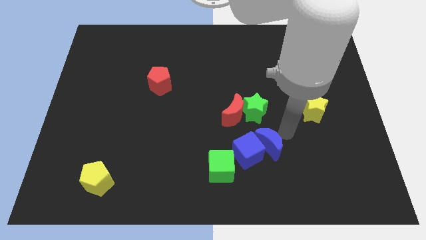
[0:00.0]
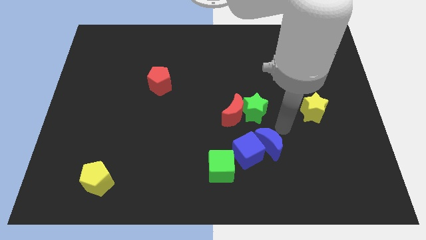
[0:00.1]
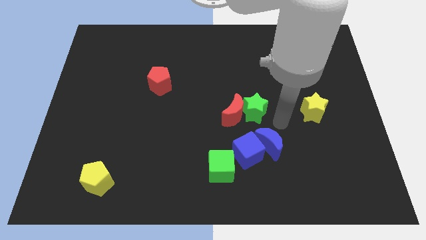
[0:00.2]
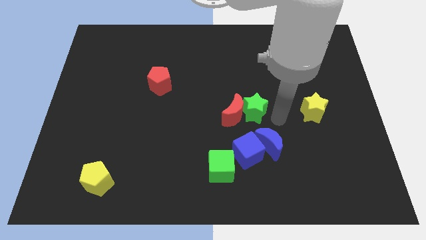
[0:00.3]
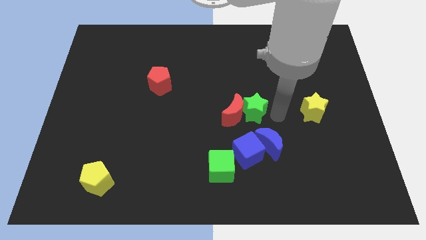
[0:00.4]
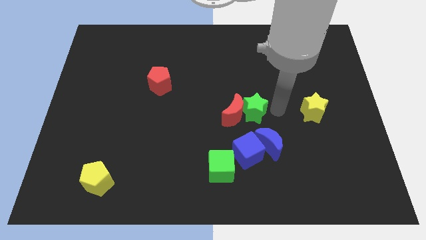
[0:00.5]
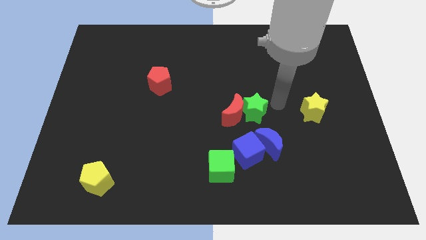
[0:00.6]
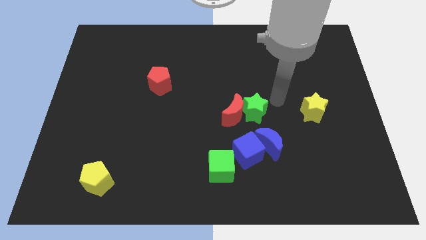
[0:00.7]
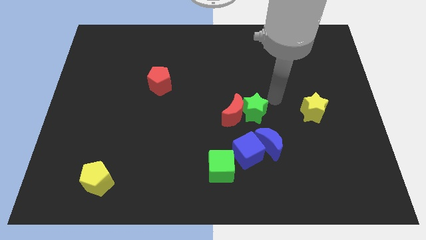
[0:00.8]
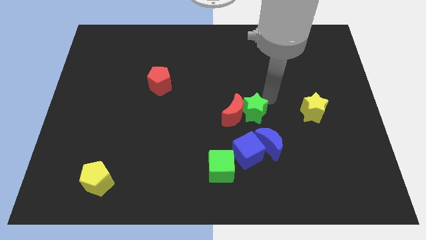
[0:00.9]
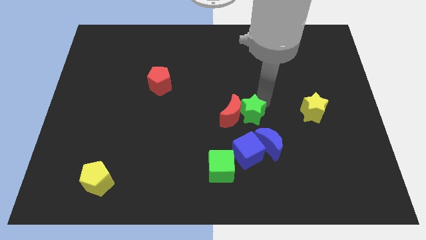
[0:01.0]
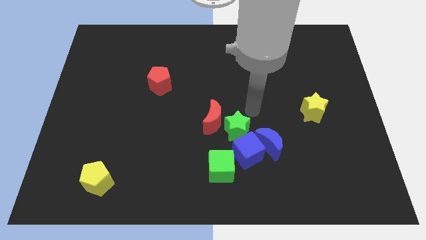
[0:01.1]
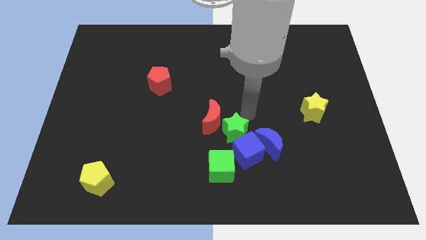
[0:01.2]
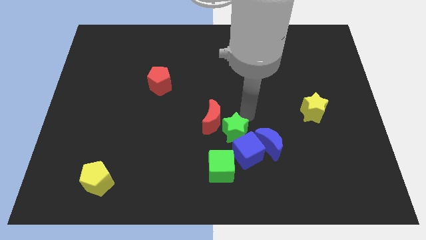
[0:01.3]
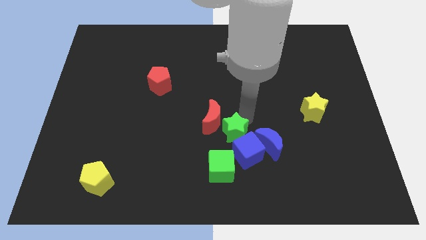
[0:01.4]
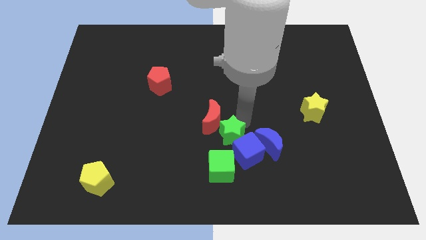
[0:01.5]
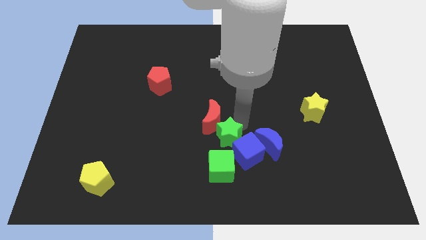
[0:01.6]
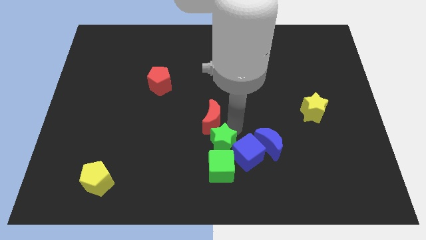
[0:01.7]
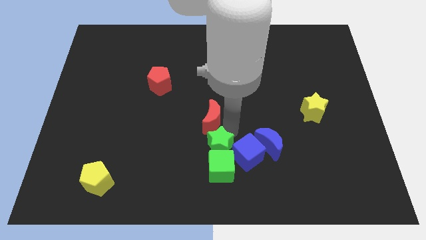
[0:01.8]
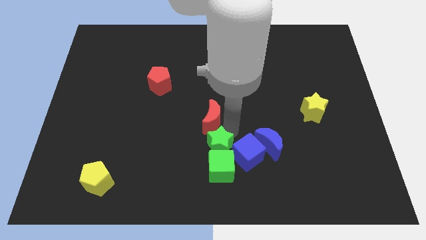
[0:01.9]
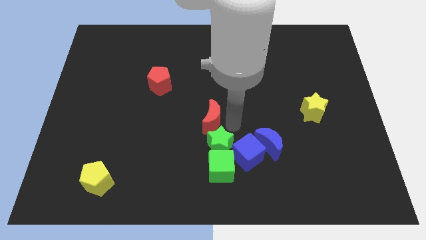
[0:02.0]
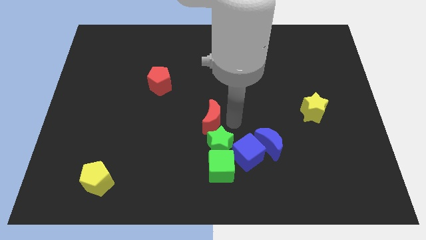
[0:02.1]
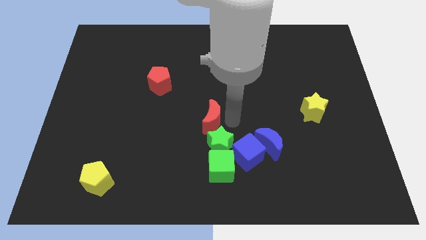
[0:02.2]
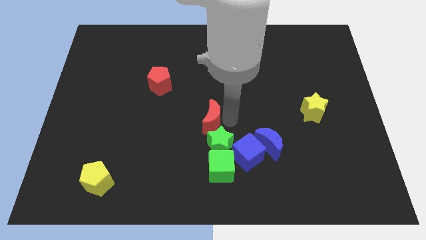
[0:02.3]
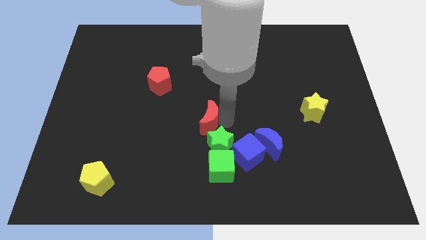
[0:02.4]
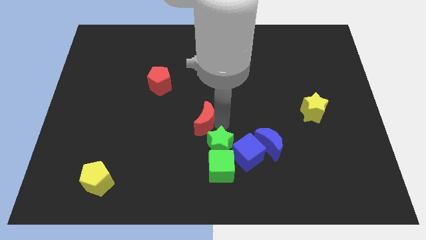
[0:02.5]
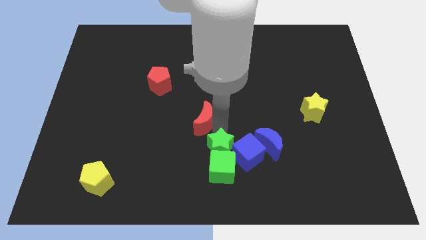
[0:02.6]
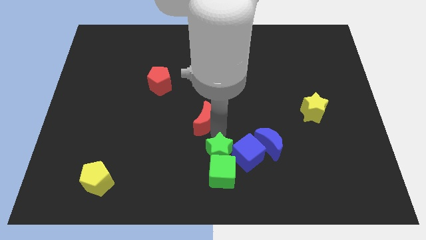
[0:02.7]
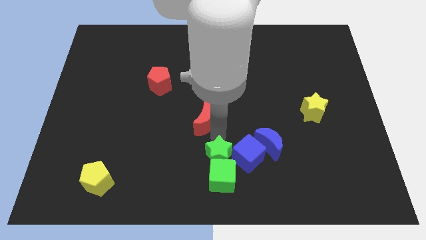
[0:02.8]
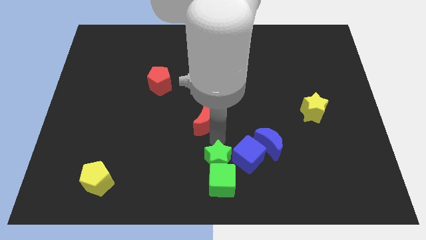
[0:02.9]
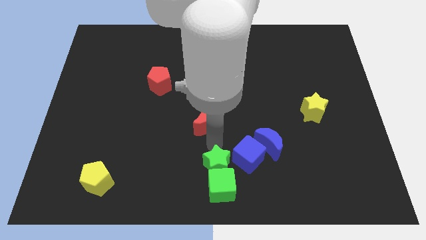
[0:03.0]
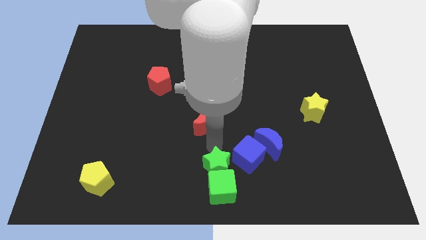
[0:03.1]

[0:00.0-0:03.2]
push the green star towards the bottom center of the board

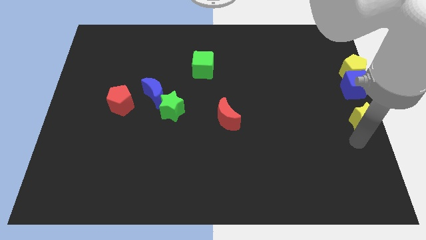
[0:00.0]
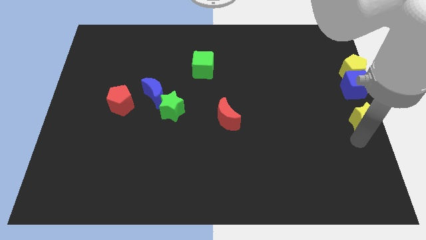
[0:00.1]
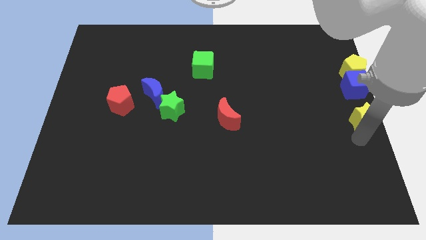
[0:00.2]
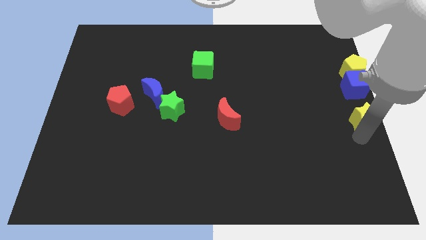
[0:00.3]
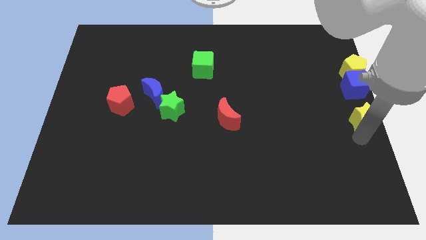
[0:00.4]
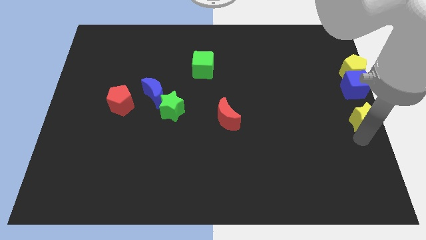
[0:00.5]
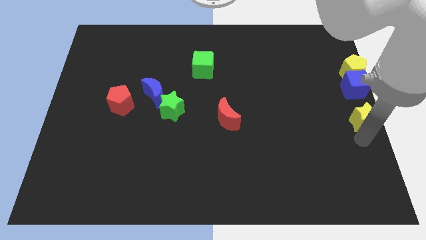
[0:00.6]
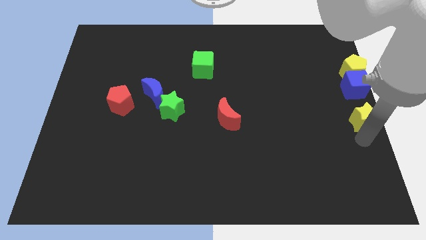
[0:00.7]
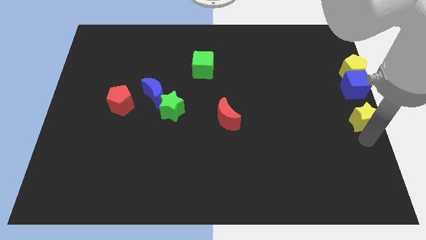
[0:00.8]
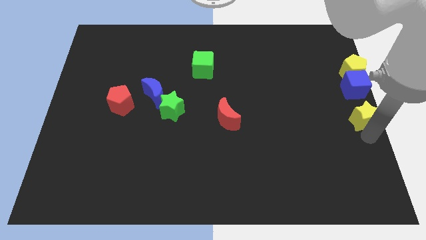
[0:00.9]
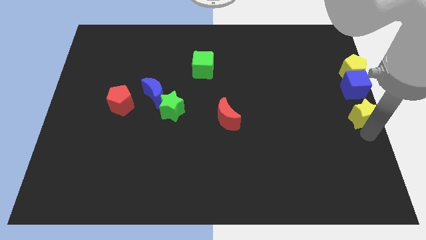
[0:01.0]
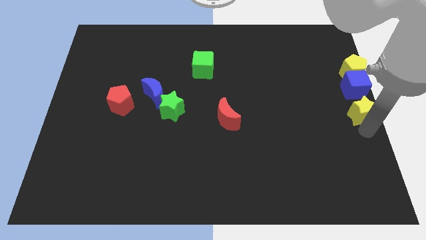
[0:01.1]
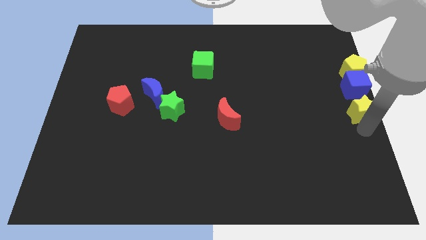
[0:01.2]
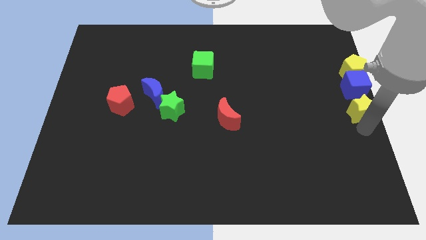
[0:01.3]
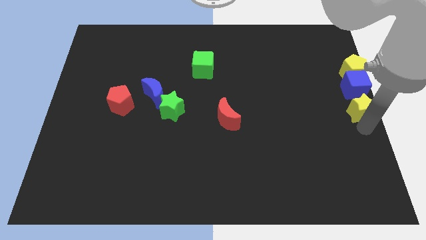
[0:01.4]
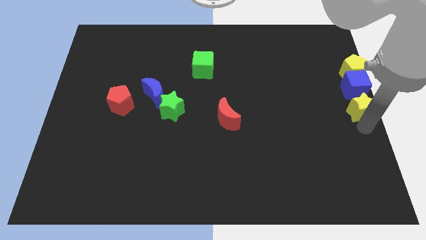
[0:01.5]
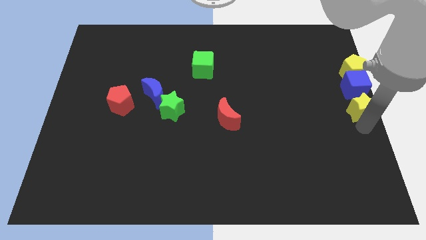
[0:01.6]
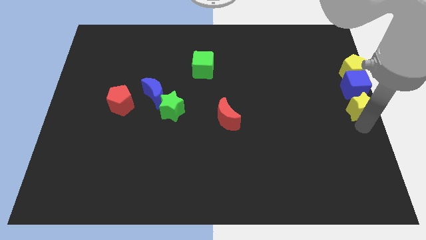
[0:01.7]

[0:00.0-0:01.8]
move the yellow star below the blue cube

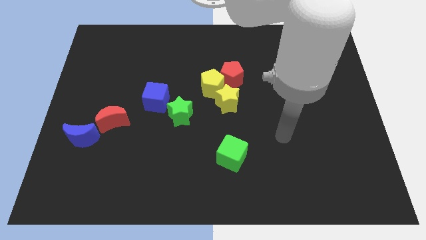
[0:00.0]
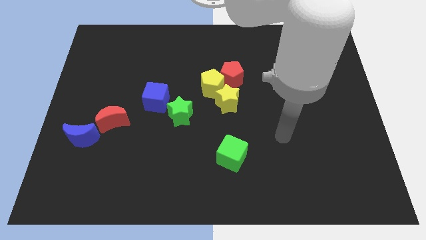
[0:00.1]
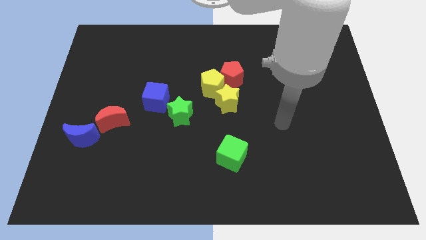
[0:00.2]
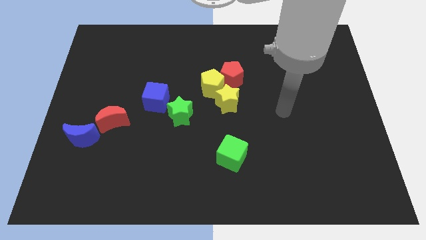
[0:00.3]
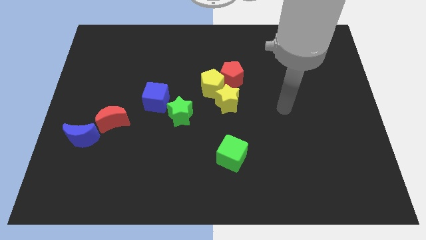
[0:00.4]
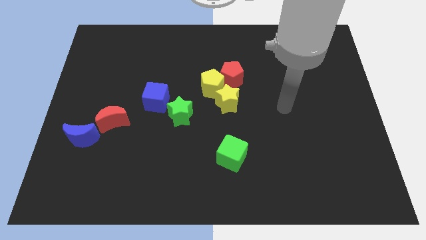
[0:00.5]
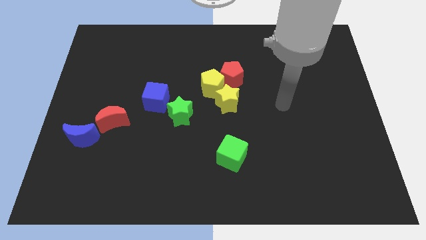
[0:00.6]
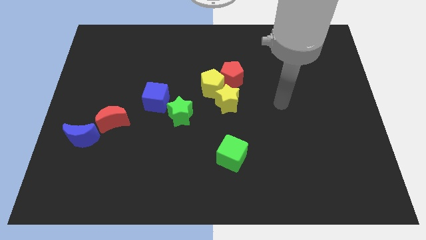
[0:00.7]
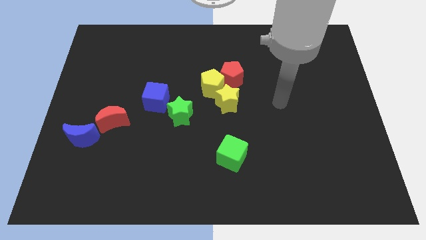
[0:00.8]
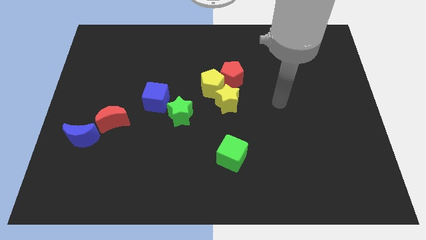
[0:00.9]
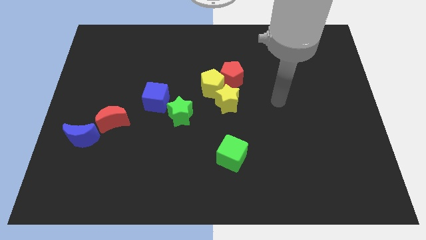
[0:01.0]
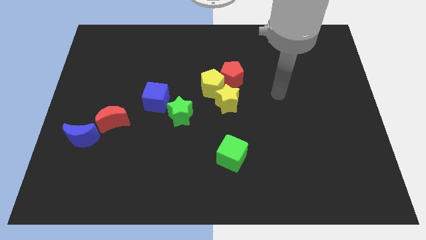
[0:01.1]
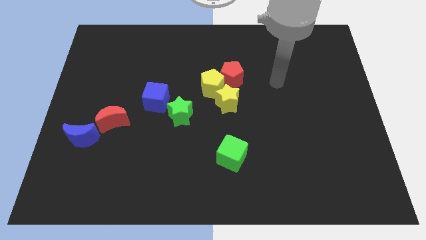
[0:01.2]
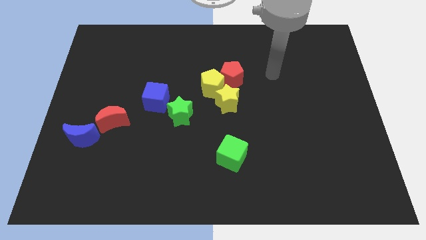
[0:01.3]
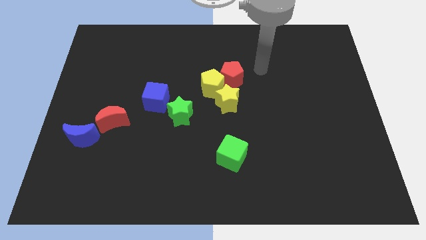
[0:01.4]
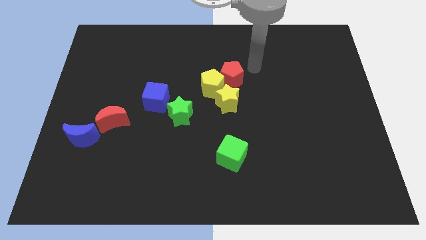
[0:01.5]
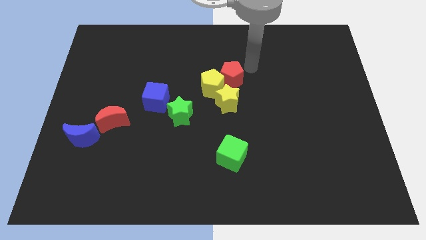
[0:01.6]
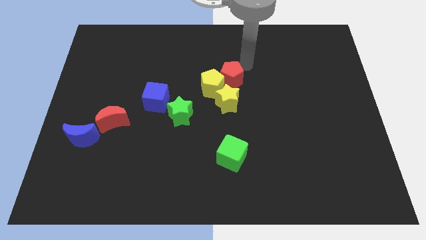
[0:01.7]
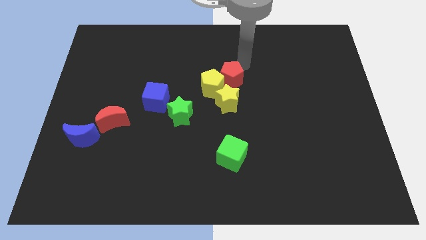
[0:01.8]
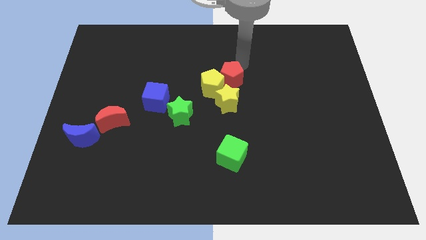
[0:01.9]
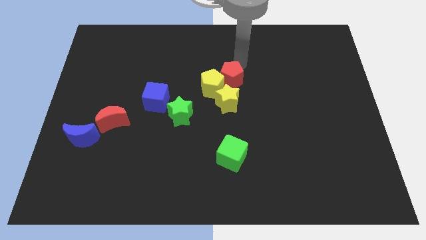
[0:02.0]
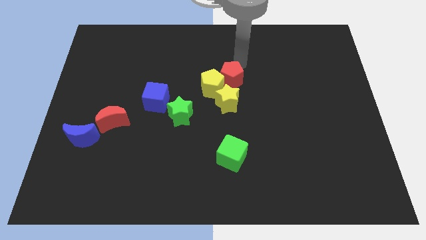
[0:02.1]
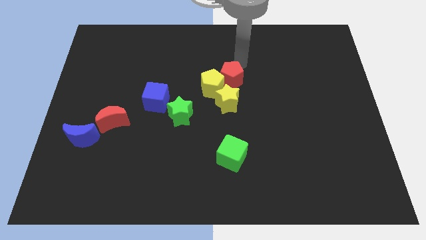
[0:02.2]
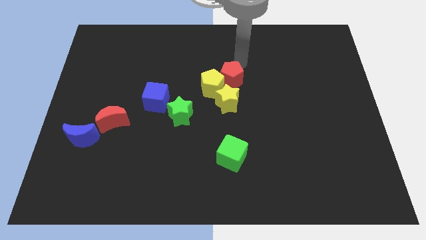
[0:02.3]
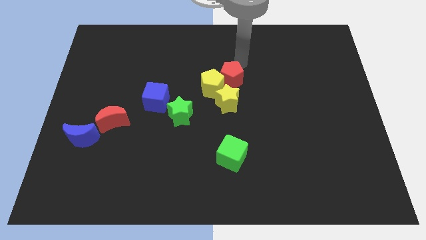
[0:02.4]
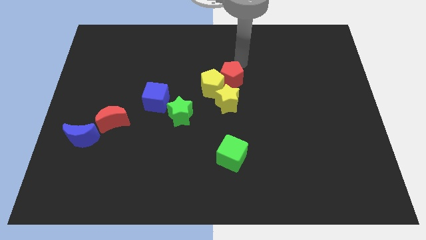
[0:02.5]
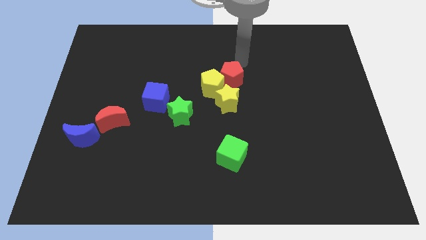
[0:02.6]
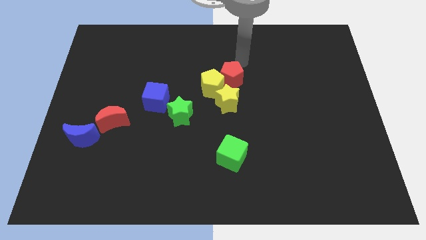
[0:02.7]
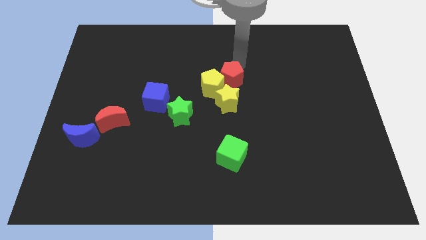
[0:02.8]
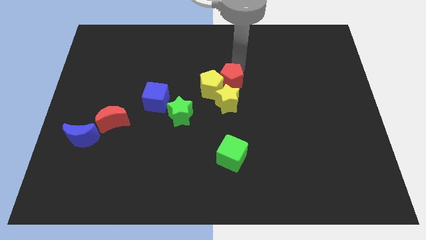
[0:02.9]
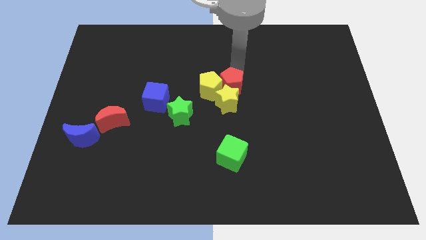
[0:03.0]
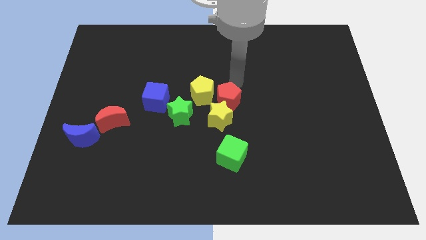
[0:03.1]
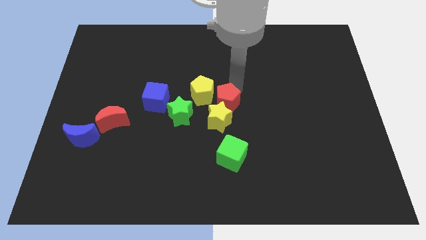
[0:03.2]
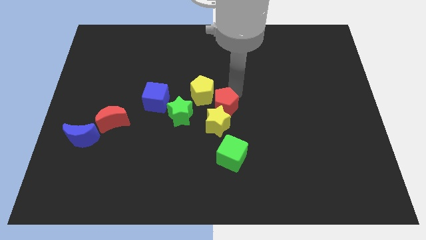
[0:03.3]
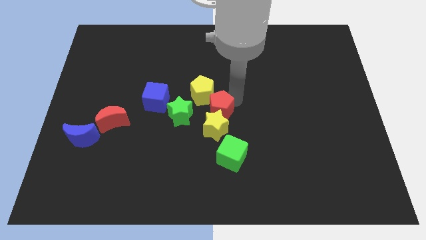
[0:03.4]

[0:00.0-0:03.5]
push the red pentagon towards the yellow star

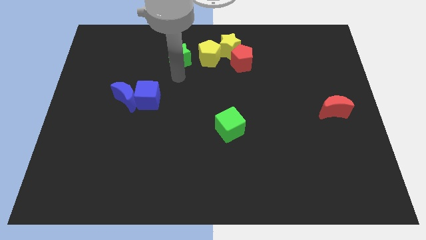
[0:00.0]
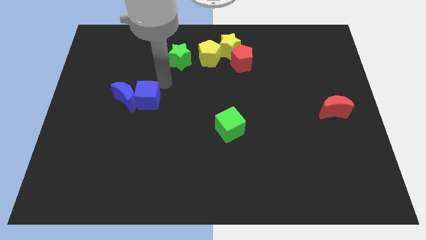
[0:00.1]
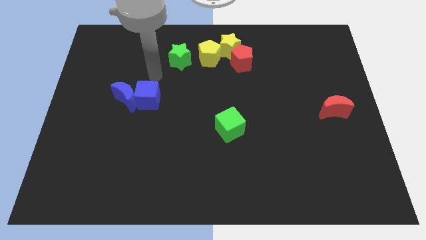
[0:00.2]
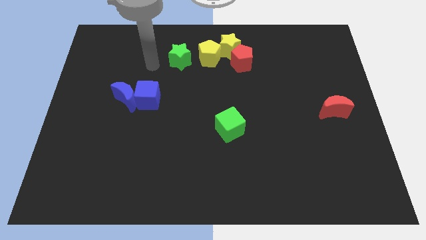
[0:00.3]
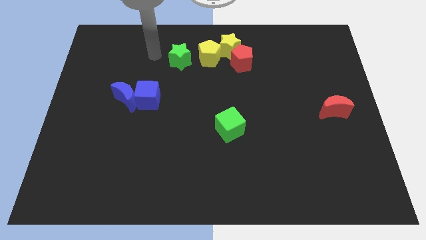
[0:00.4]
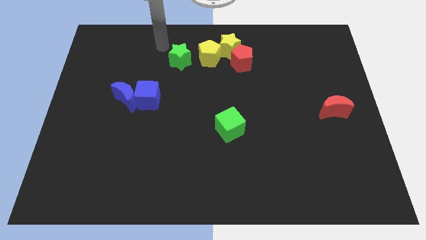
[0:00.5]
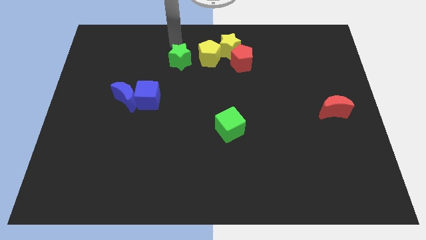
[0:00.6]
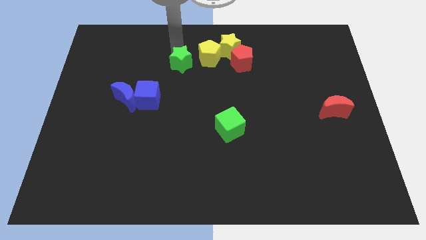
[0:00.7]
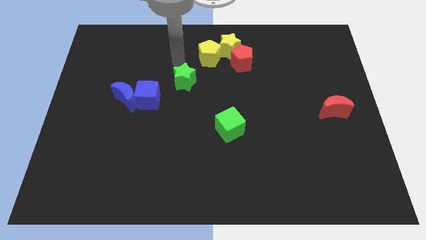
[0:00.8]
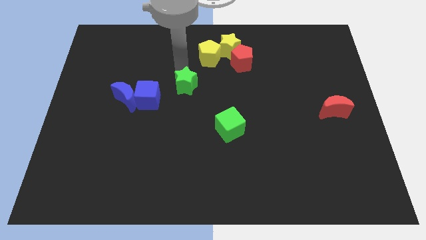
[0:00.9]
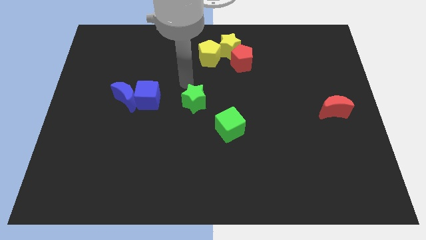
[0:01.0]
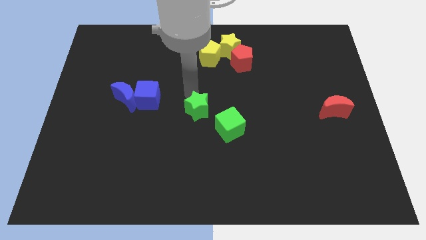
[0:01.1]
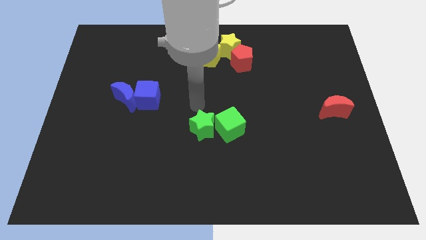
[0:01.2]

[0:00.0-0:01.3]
move the green star close to the green cube
